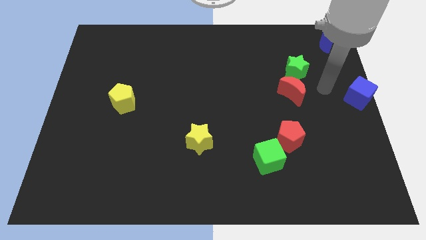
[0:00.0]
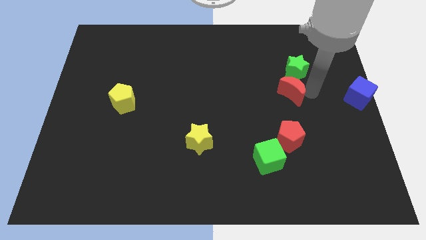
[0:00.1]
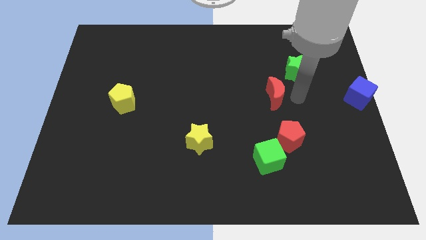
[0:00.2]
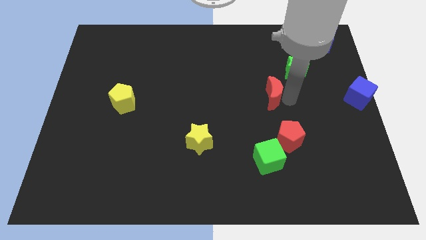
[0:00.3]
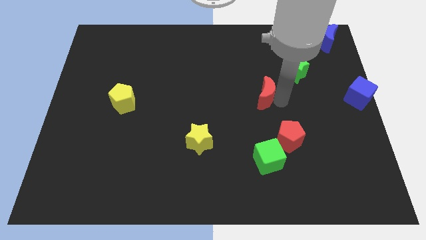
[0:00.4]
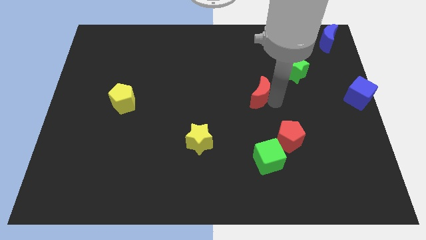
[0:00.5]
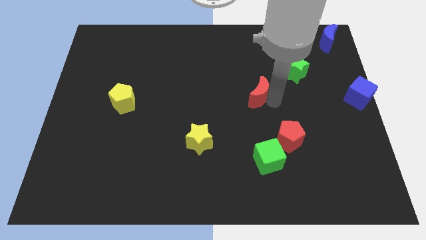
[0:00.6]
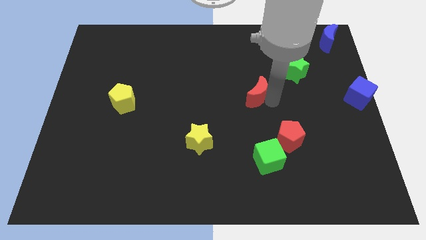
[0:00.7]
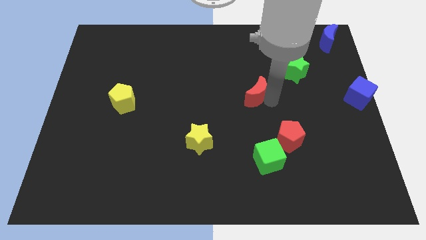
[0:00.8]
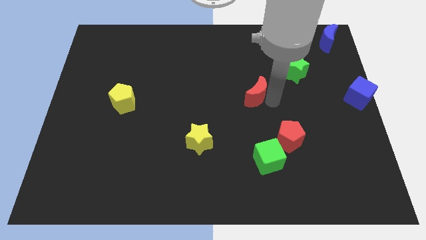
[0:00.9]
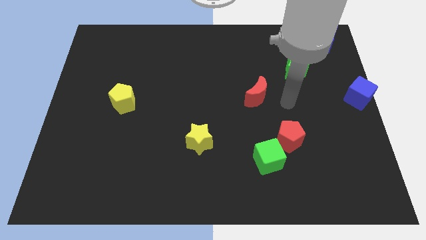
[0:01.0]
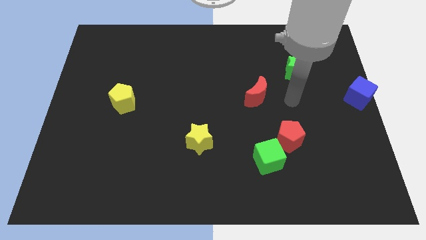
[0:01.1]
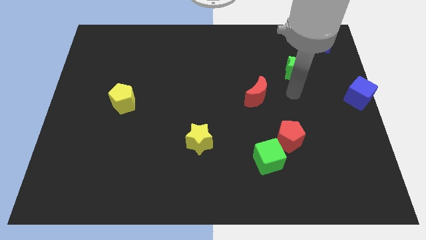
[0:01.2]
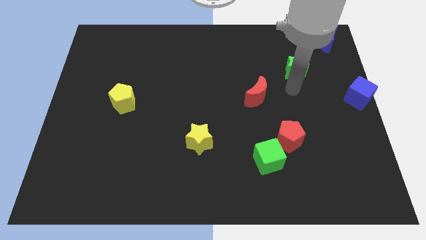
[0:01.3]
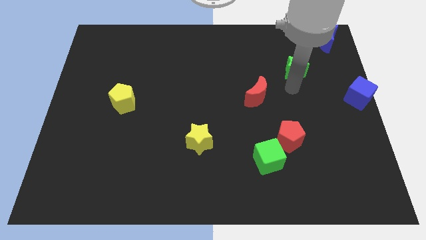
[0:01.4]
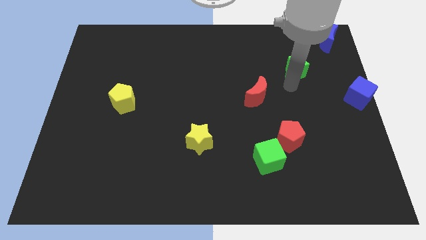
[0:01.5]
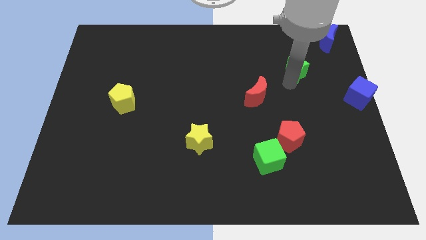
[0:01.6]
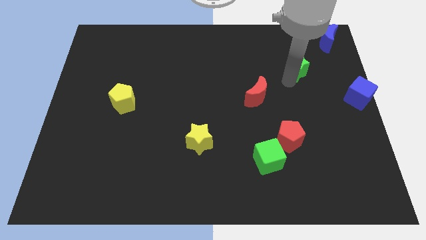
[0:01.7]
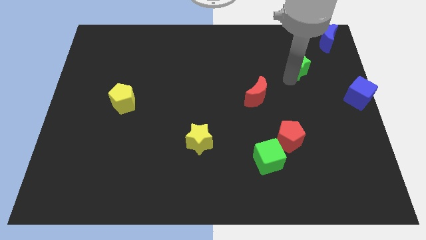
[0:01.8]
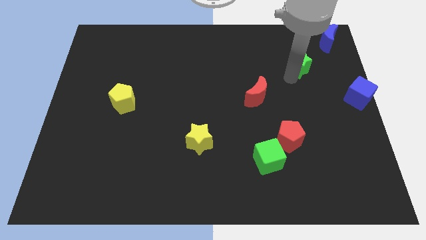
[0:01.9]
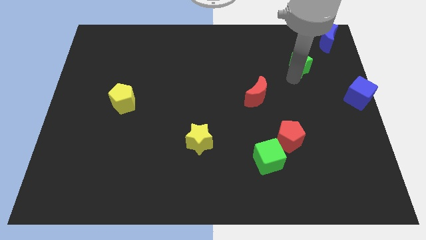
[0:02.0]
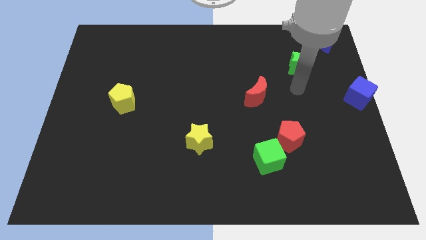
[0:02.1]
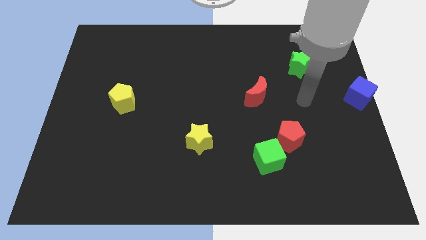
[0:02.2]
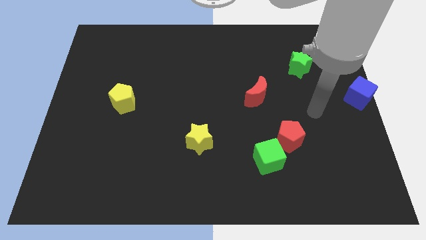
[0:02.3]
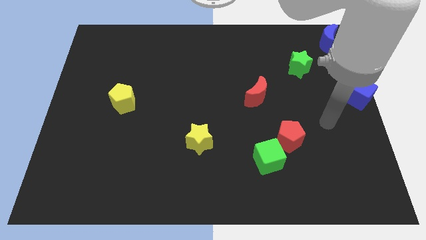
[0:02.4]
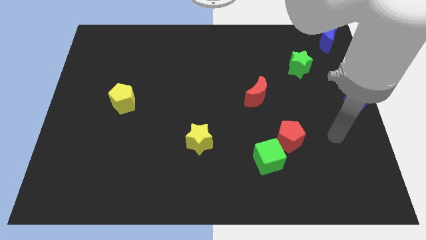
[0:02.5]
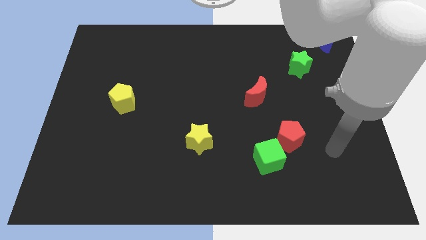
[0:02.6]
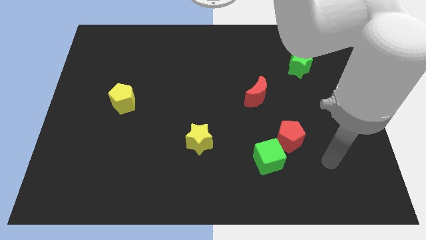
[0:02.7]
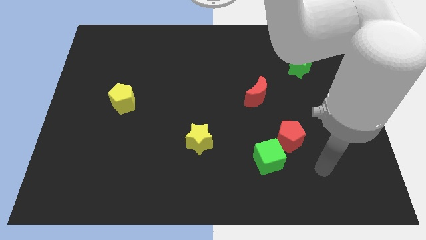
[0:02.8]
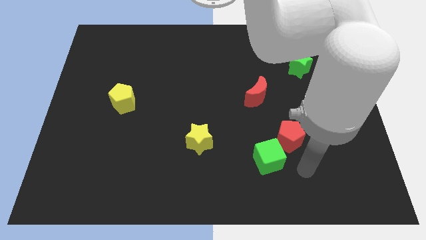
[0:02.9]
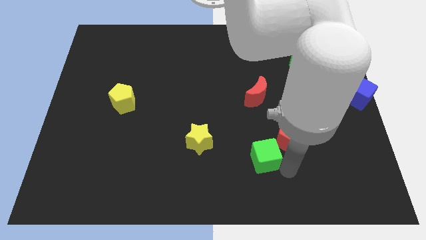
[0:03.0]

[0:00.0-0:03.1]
move red crescent and the green star away from each other

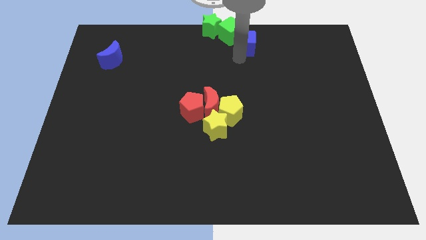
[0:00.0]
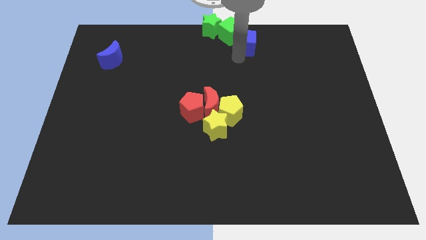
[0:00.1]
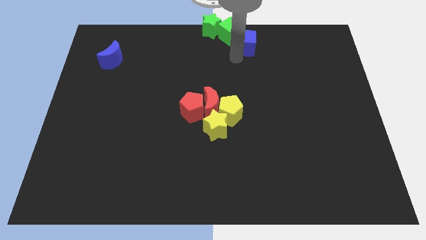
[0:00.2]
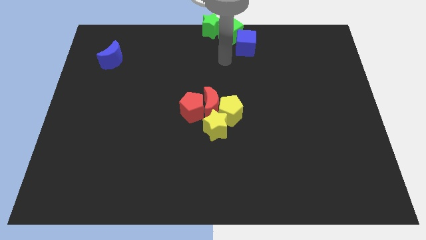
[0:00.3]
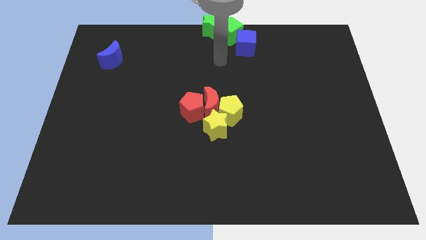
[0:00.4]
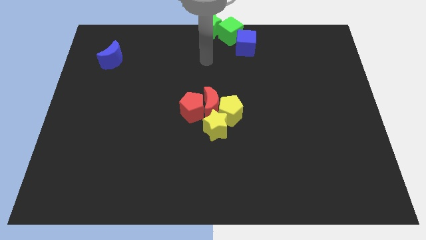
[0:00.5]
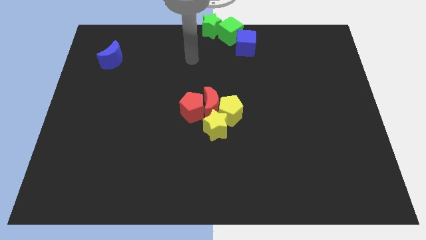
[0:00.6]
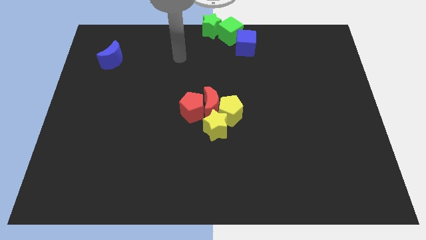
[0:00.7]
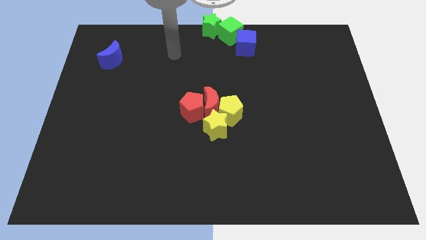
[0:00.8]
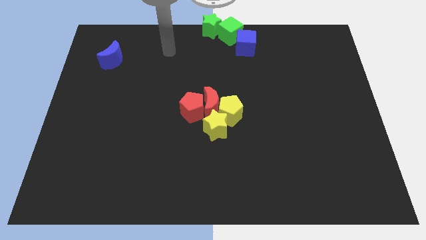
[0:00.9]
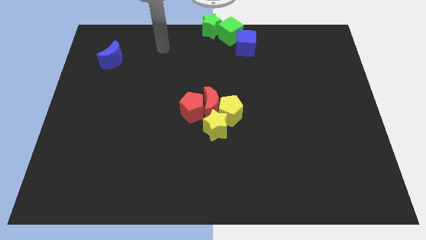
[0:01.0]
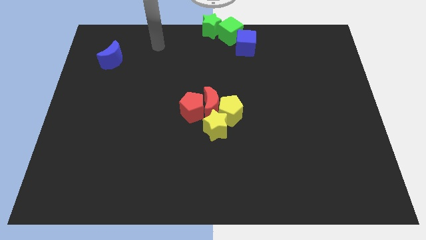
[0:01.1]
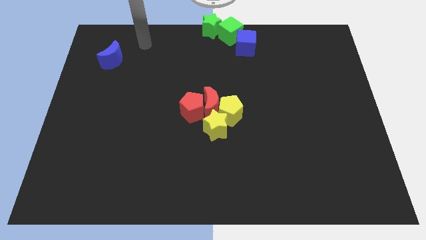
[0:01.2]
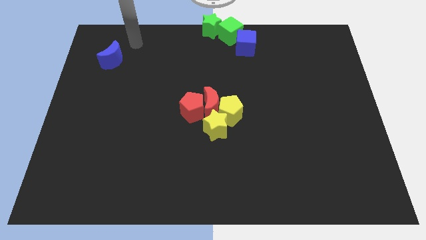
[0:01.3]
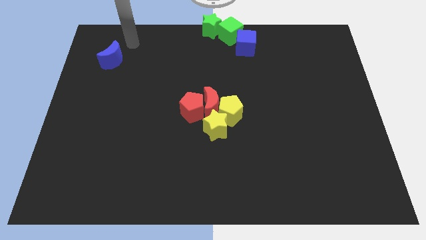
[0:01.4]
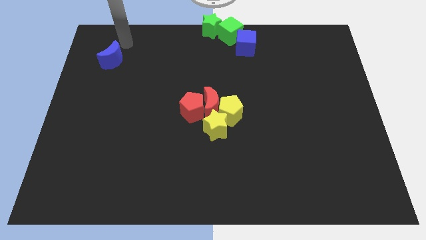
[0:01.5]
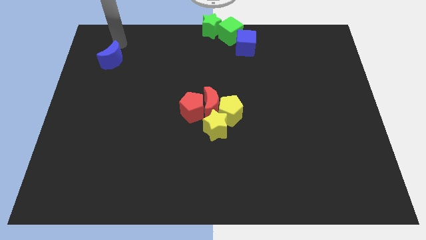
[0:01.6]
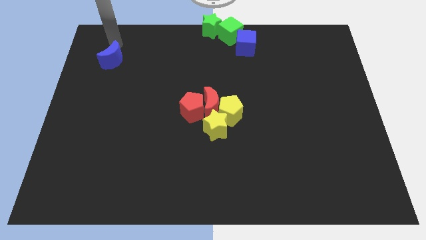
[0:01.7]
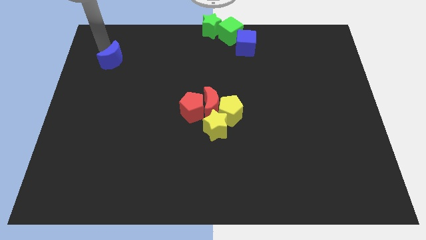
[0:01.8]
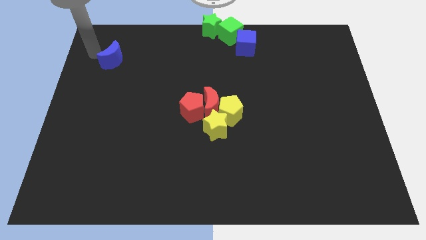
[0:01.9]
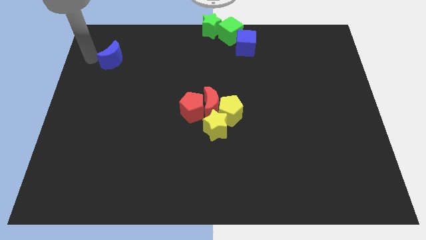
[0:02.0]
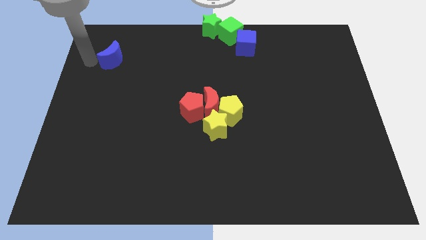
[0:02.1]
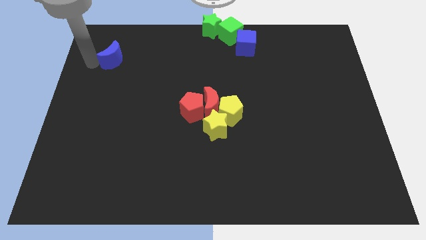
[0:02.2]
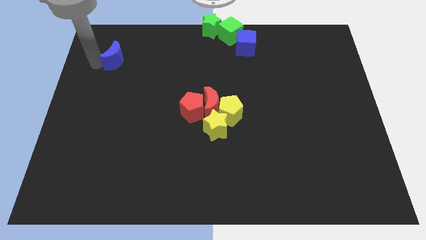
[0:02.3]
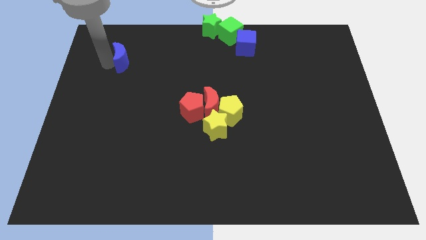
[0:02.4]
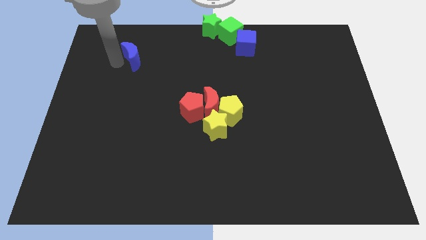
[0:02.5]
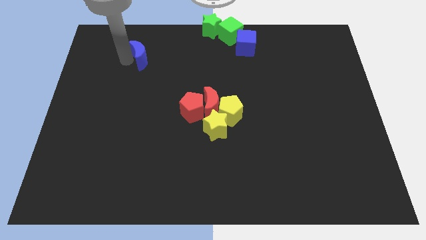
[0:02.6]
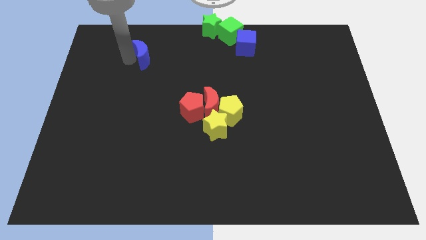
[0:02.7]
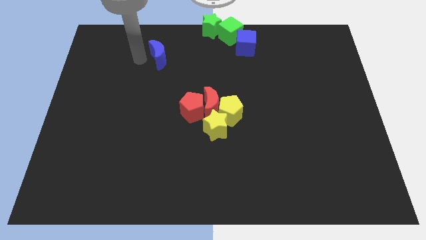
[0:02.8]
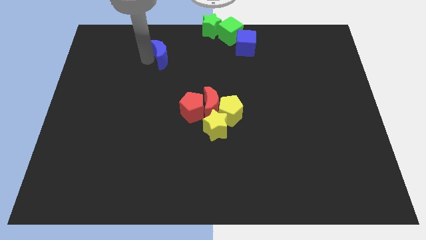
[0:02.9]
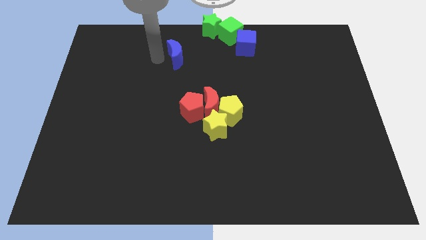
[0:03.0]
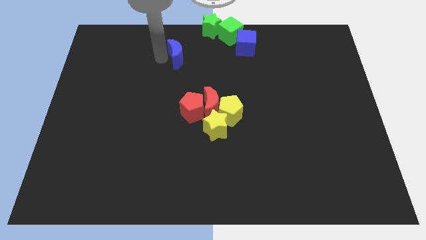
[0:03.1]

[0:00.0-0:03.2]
move blue moon slightly right

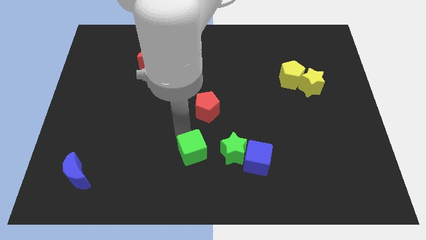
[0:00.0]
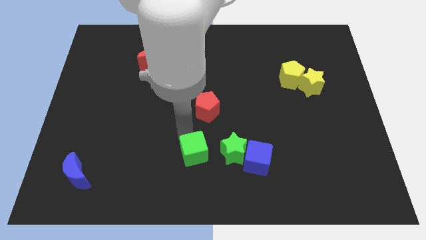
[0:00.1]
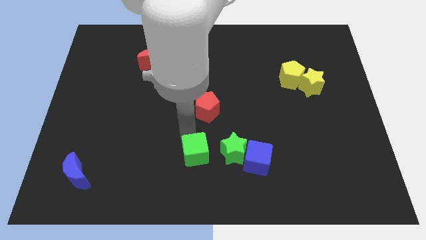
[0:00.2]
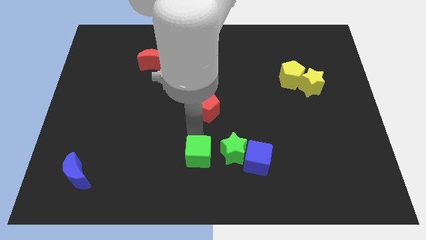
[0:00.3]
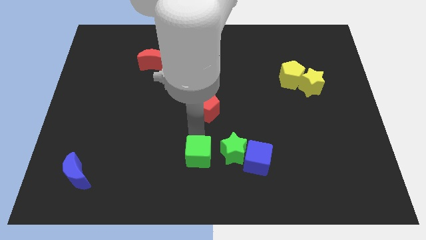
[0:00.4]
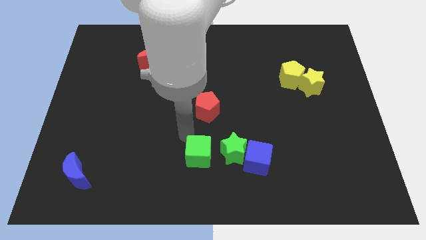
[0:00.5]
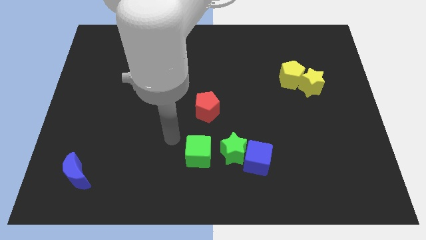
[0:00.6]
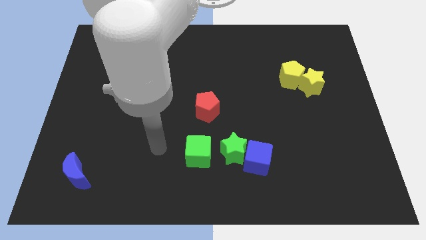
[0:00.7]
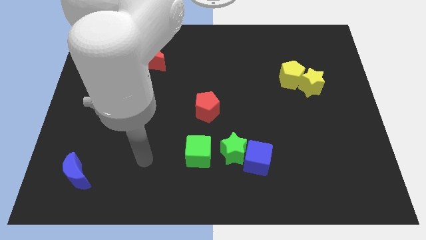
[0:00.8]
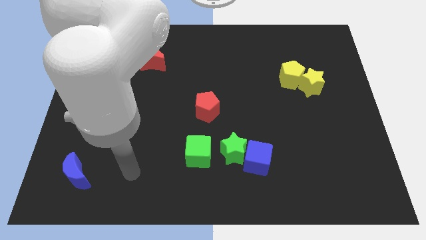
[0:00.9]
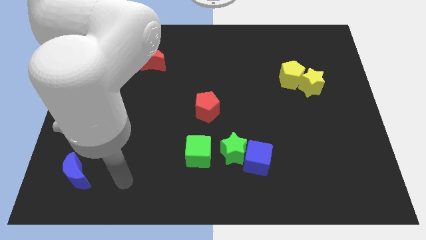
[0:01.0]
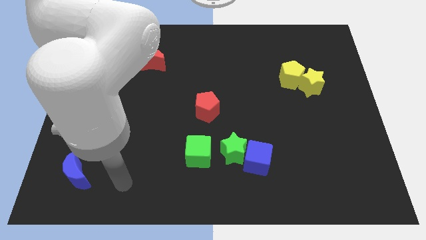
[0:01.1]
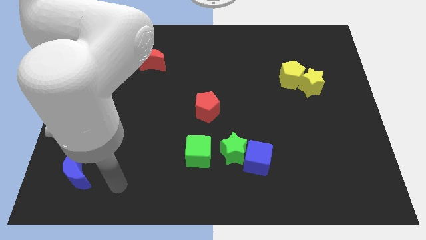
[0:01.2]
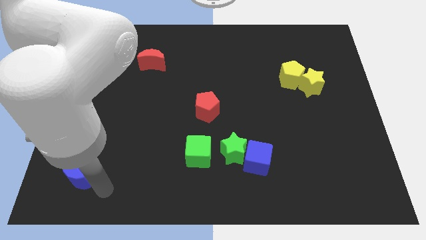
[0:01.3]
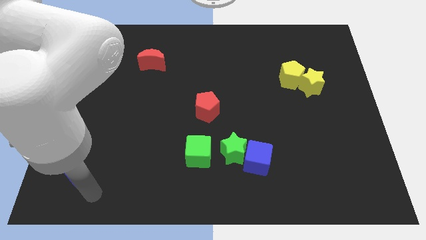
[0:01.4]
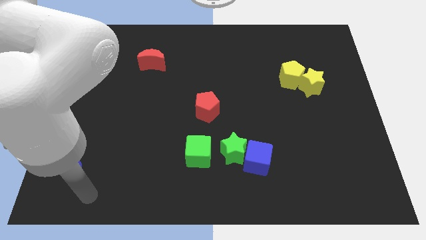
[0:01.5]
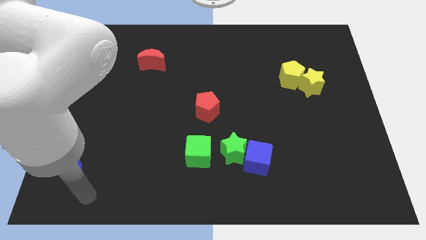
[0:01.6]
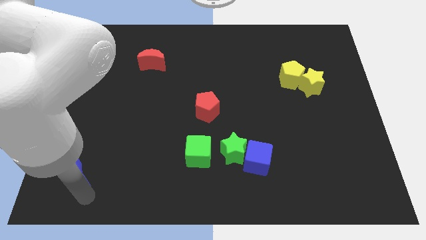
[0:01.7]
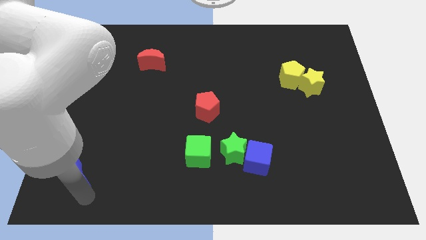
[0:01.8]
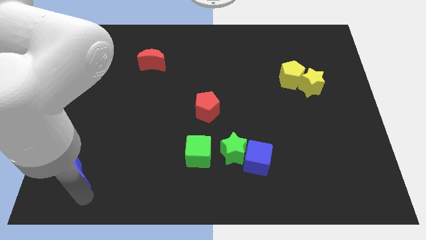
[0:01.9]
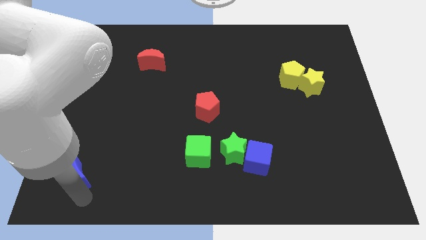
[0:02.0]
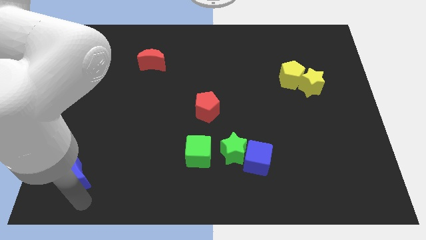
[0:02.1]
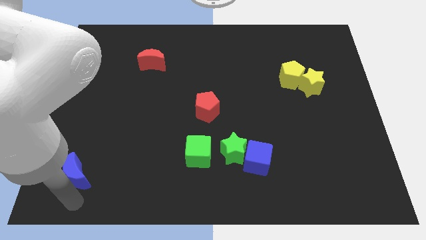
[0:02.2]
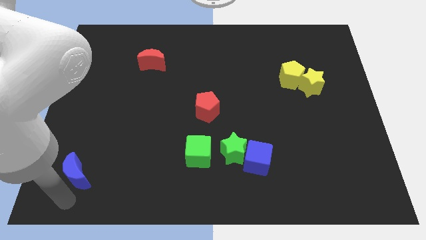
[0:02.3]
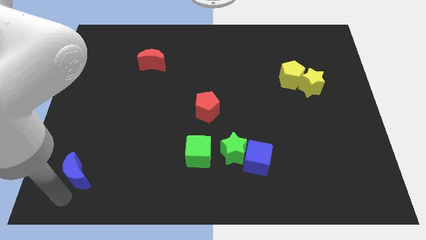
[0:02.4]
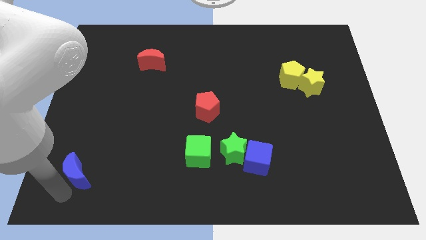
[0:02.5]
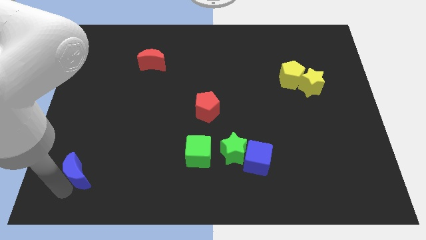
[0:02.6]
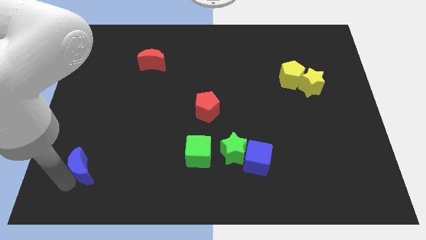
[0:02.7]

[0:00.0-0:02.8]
move your arm towards the blue crescent

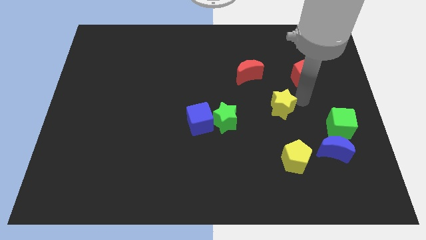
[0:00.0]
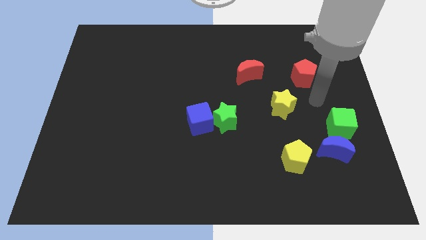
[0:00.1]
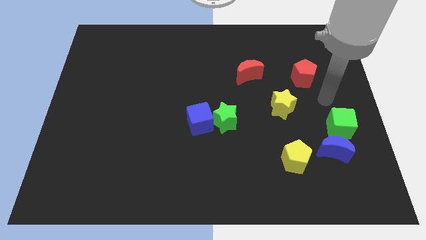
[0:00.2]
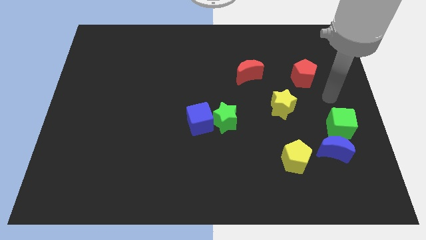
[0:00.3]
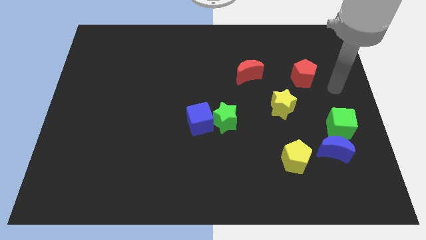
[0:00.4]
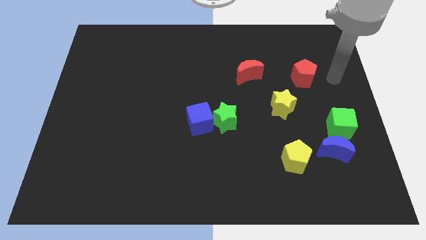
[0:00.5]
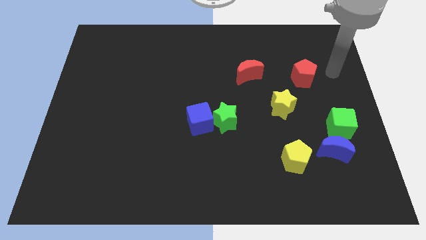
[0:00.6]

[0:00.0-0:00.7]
move your arm away from the yellow star
